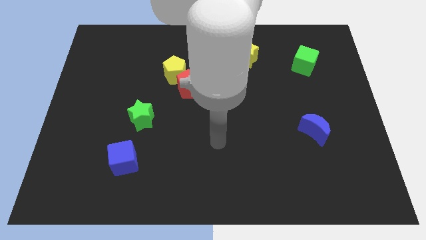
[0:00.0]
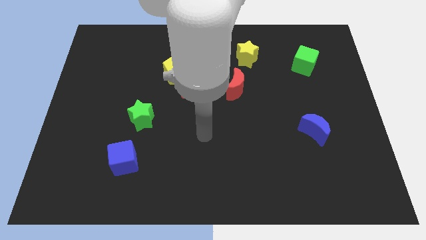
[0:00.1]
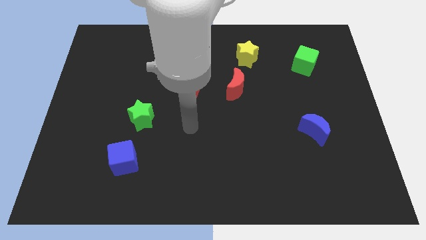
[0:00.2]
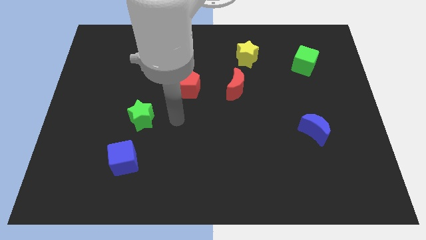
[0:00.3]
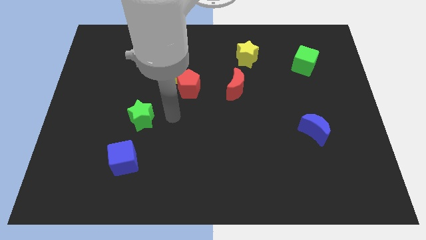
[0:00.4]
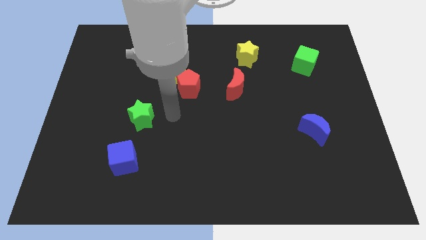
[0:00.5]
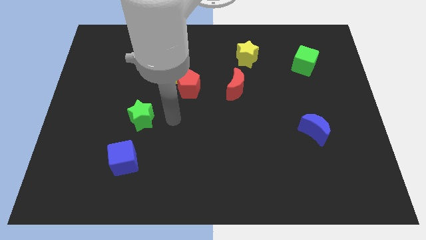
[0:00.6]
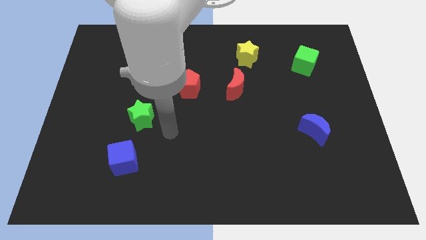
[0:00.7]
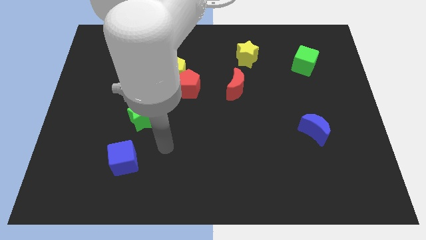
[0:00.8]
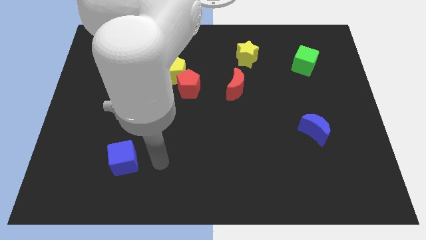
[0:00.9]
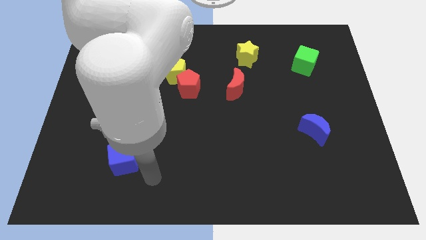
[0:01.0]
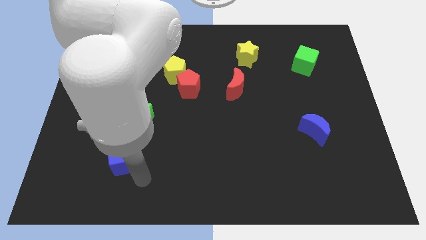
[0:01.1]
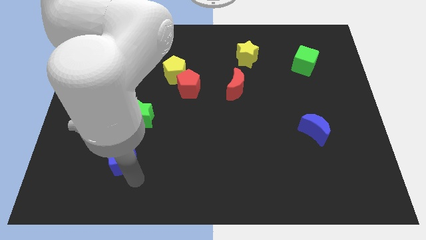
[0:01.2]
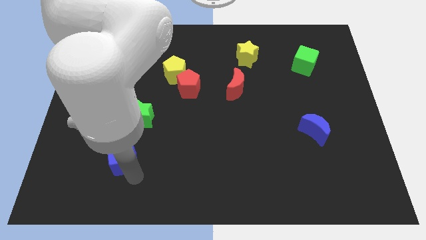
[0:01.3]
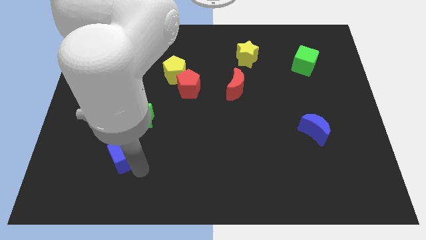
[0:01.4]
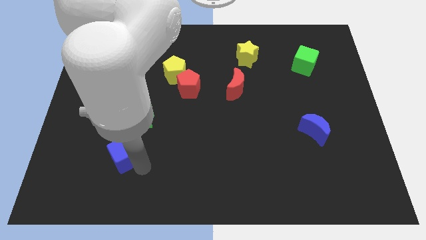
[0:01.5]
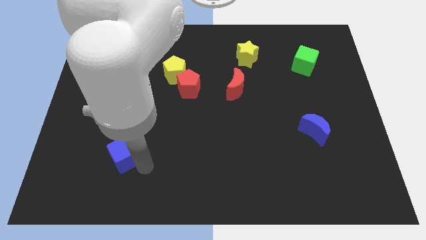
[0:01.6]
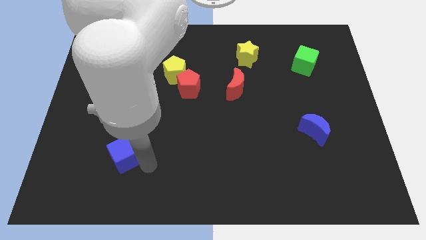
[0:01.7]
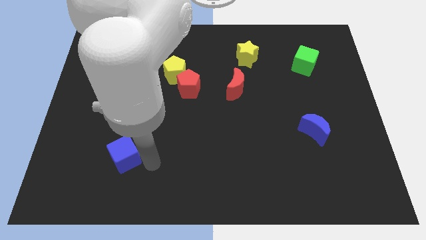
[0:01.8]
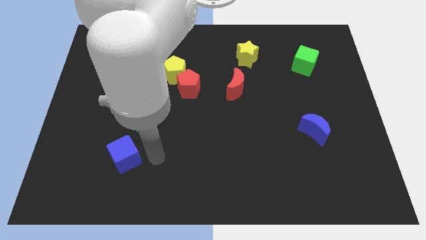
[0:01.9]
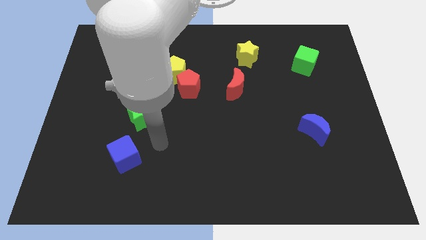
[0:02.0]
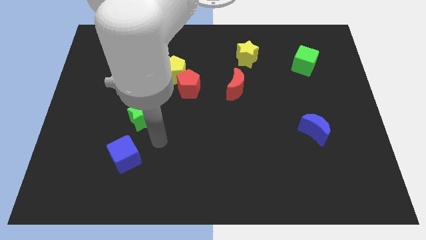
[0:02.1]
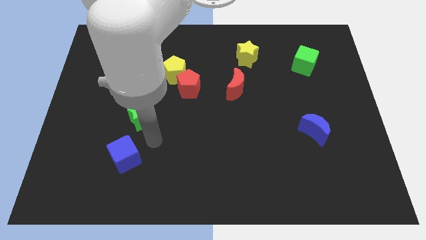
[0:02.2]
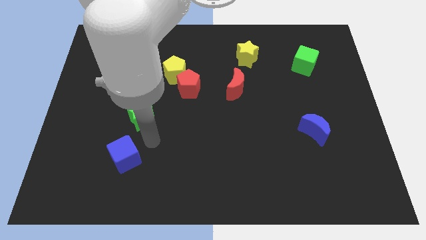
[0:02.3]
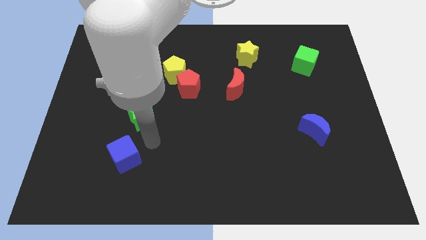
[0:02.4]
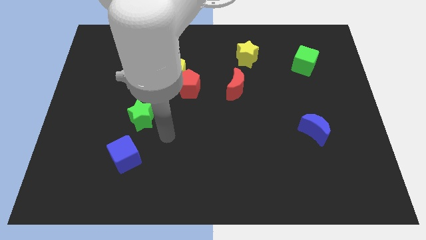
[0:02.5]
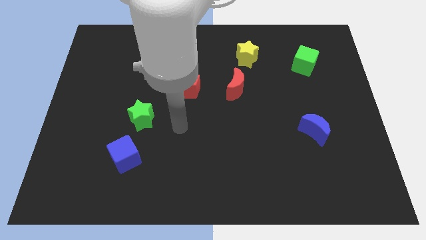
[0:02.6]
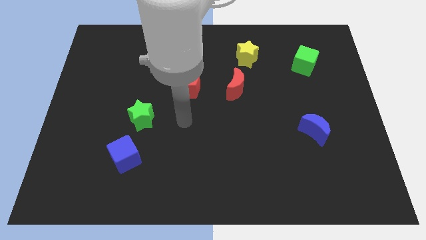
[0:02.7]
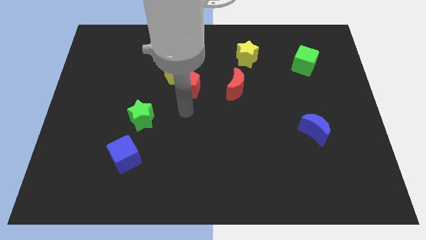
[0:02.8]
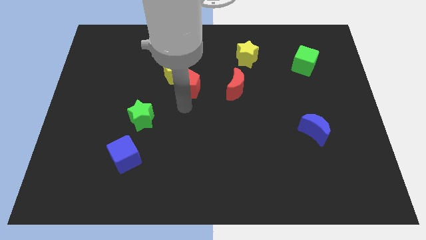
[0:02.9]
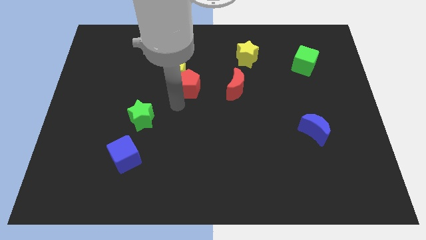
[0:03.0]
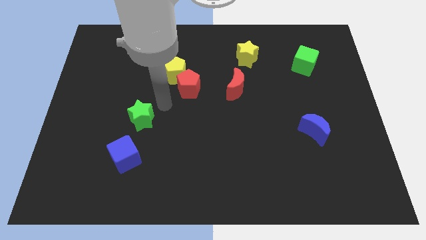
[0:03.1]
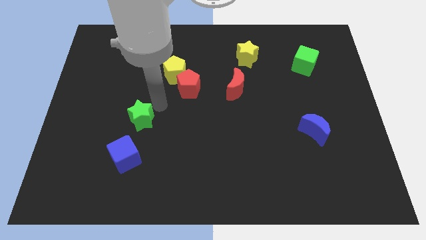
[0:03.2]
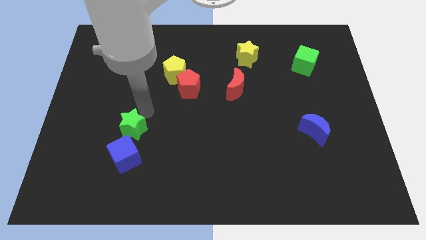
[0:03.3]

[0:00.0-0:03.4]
push the green star to the top of the blue cube

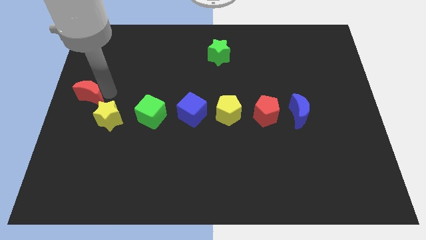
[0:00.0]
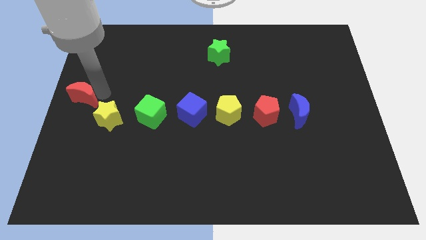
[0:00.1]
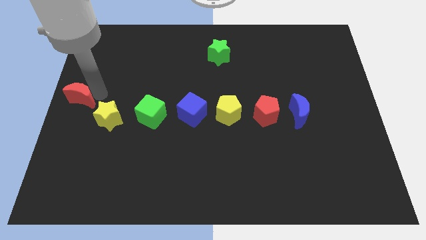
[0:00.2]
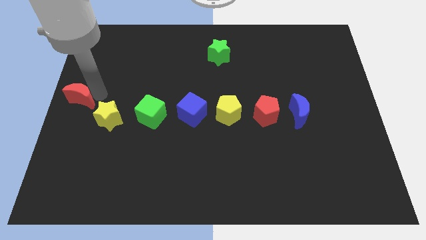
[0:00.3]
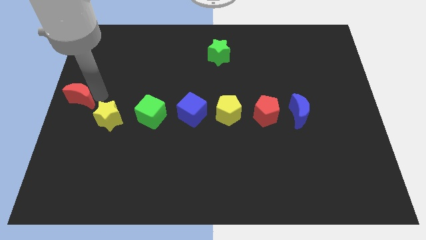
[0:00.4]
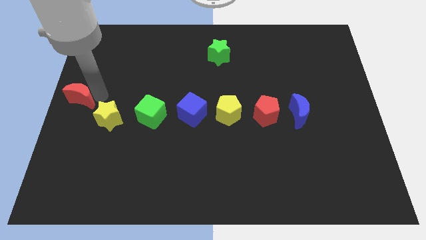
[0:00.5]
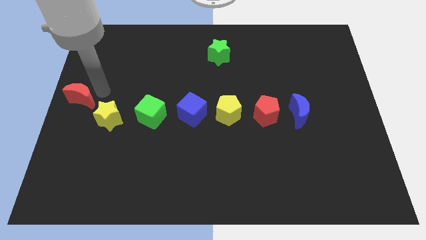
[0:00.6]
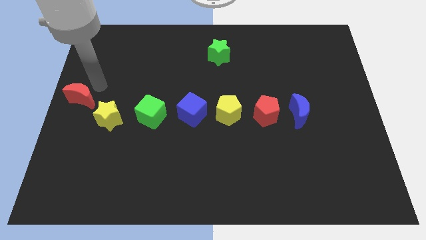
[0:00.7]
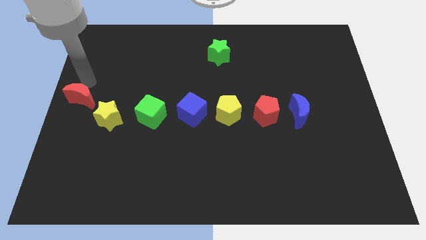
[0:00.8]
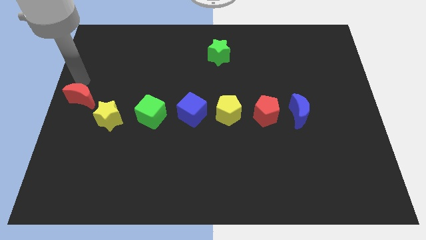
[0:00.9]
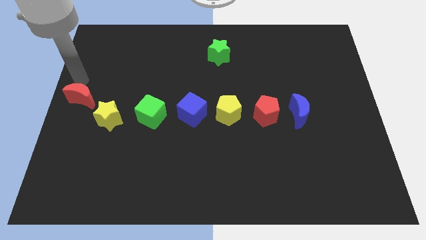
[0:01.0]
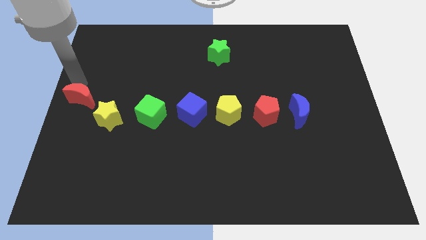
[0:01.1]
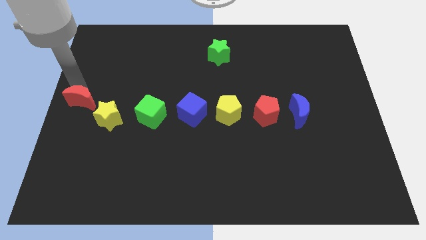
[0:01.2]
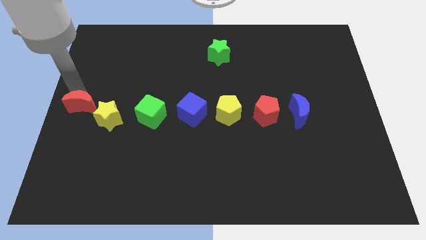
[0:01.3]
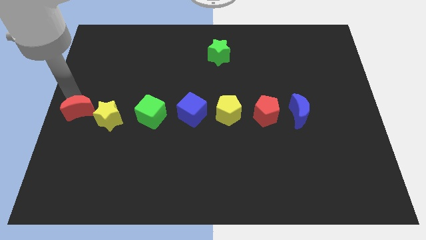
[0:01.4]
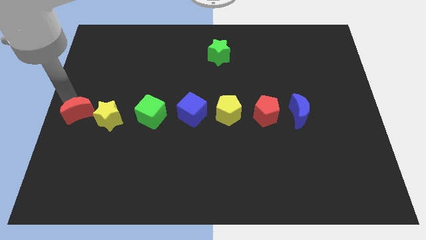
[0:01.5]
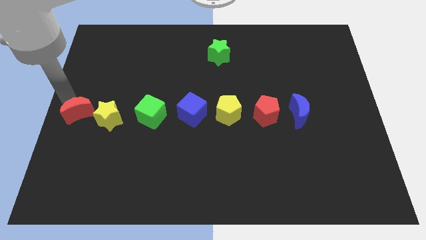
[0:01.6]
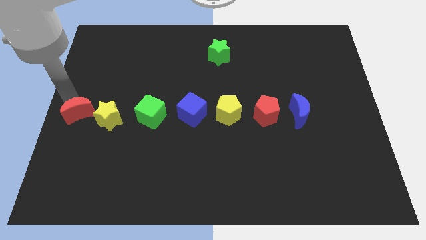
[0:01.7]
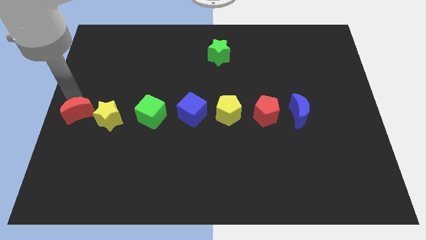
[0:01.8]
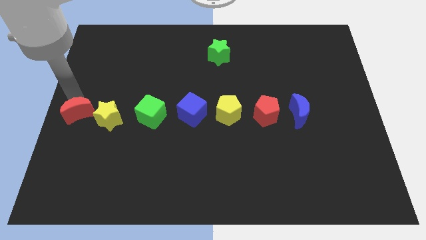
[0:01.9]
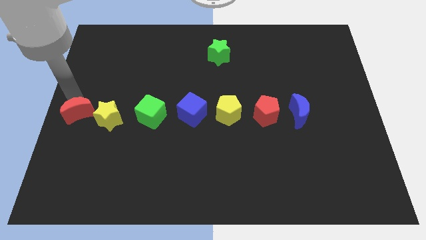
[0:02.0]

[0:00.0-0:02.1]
place the red crescent into the yellow star

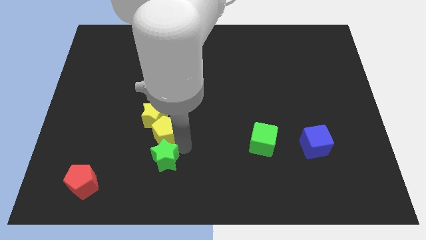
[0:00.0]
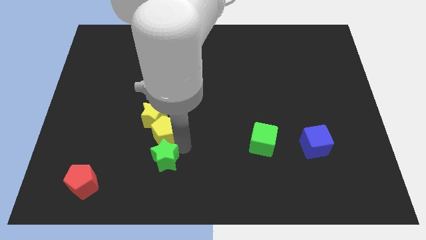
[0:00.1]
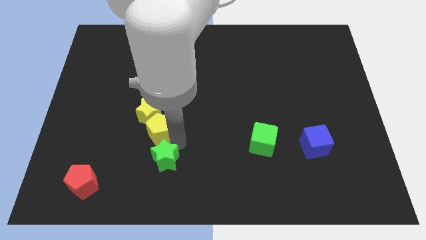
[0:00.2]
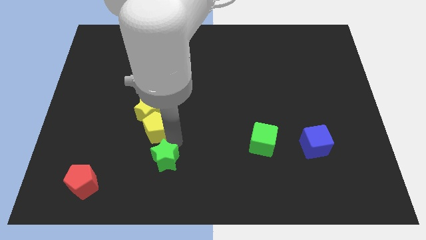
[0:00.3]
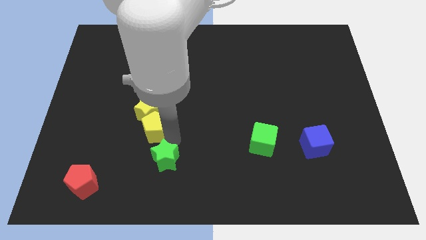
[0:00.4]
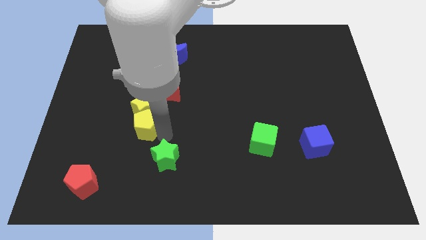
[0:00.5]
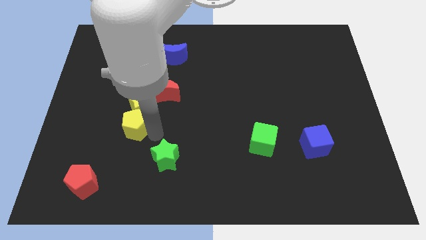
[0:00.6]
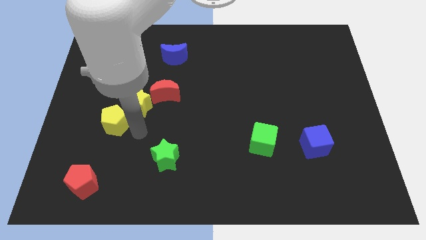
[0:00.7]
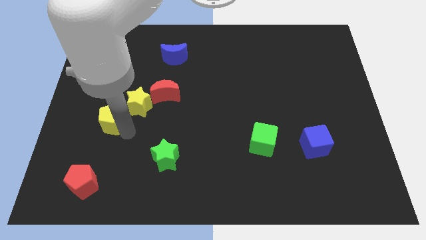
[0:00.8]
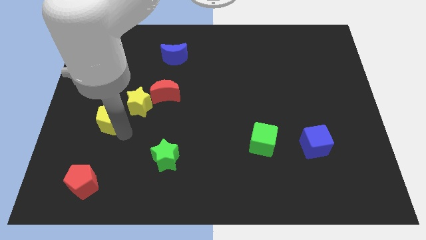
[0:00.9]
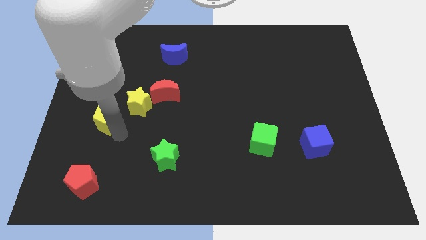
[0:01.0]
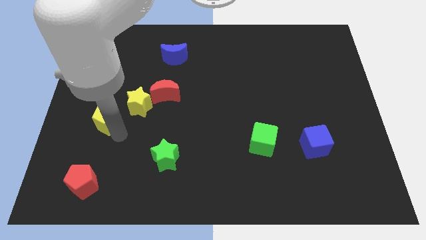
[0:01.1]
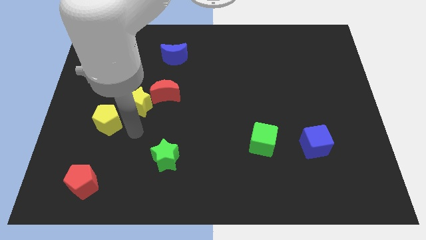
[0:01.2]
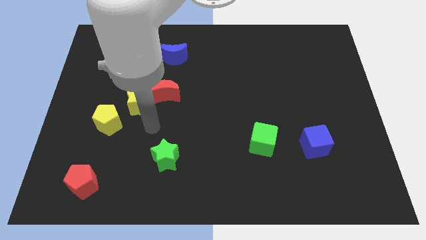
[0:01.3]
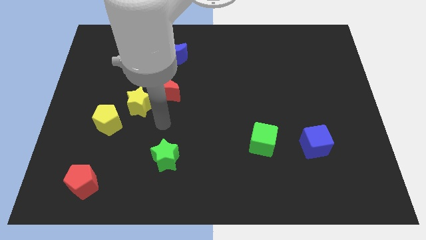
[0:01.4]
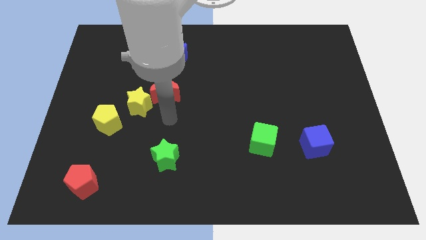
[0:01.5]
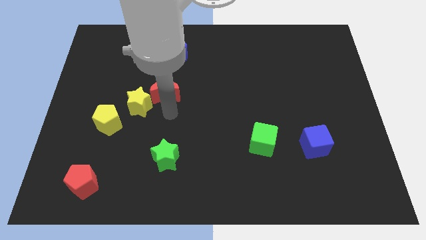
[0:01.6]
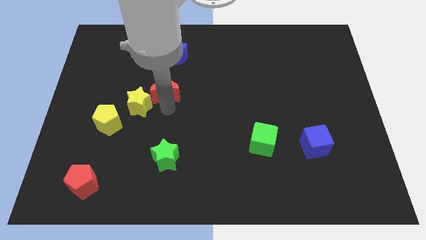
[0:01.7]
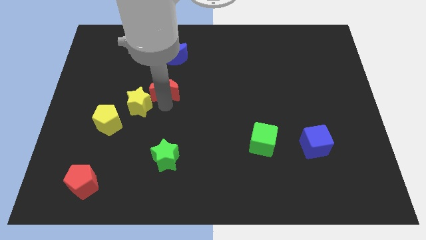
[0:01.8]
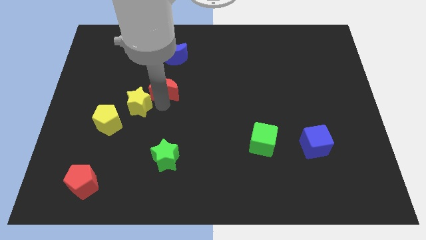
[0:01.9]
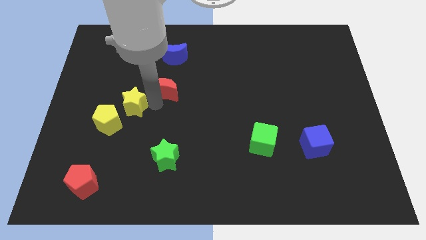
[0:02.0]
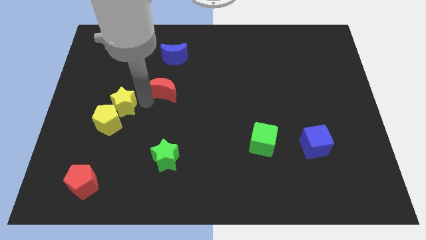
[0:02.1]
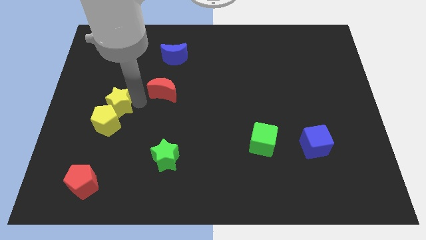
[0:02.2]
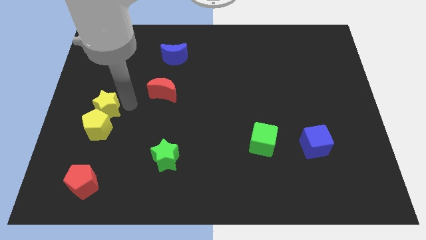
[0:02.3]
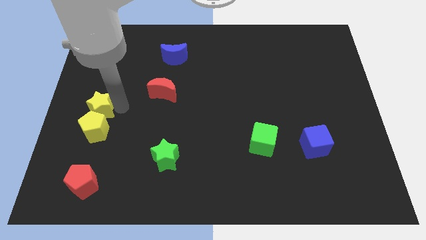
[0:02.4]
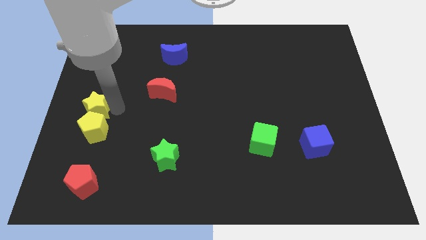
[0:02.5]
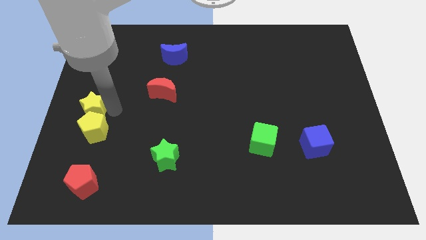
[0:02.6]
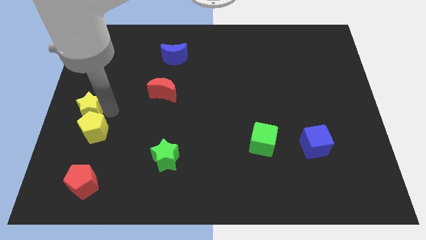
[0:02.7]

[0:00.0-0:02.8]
slide yellow star above yellow pentagon

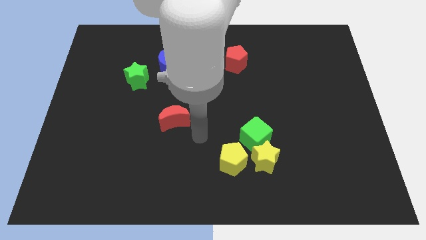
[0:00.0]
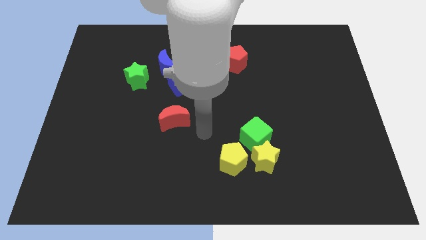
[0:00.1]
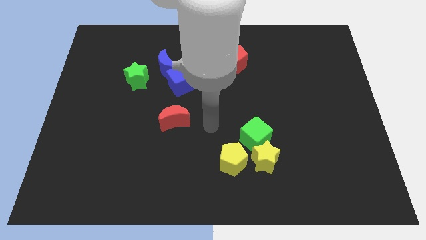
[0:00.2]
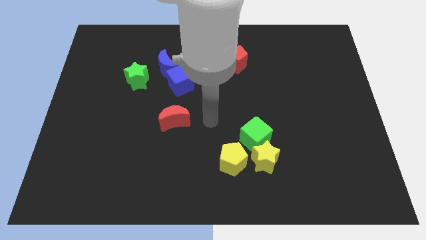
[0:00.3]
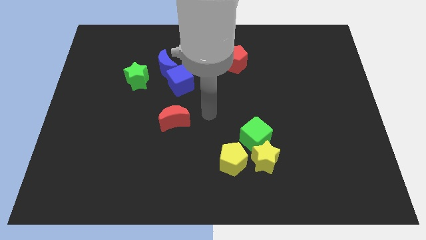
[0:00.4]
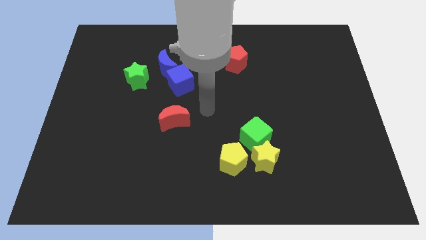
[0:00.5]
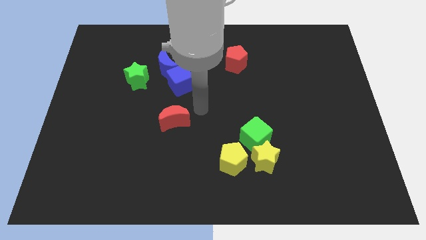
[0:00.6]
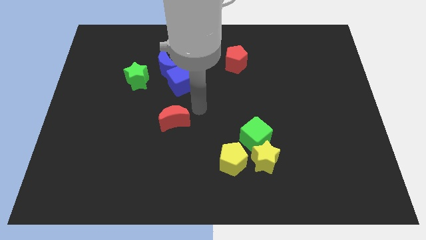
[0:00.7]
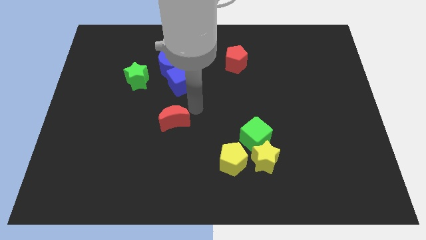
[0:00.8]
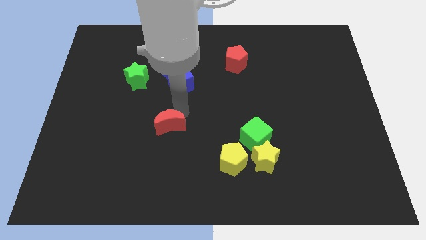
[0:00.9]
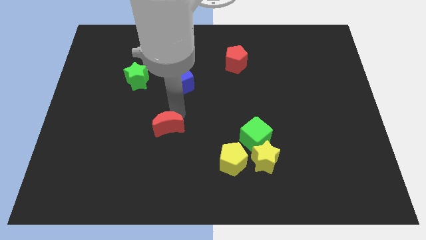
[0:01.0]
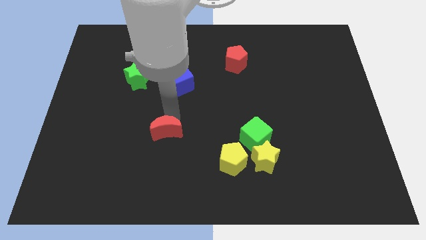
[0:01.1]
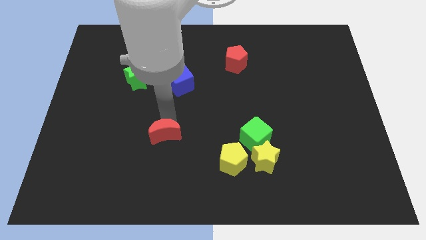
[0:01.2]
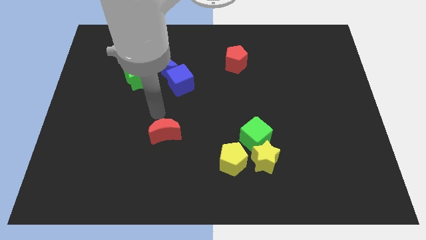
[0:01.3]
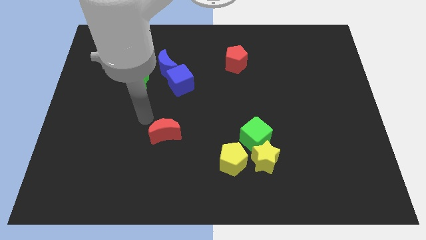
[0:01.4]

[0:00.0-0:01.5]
slightly move the red moon down
